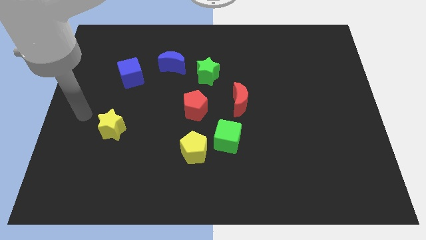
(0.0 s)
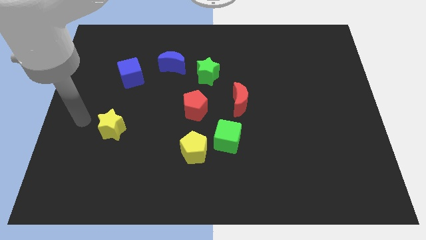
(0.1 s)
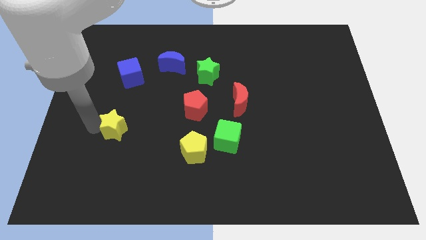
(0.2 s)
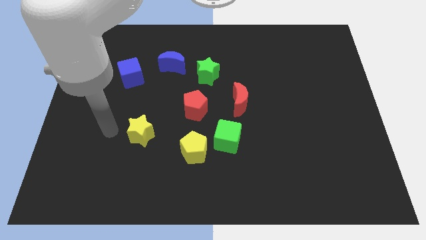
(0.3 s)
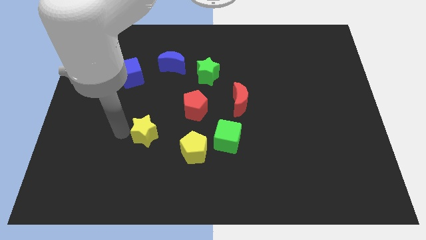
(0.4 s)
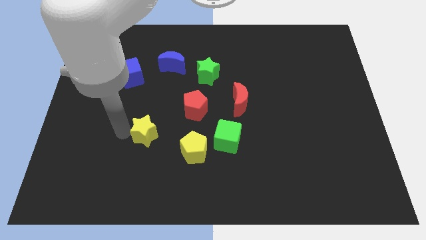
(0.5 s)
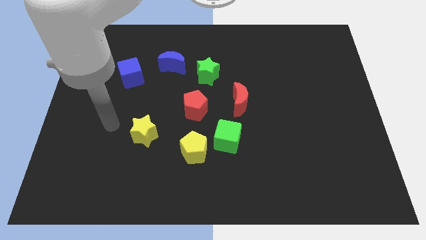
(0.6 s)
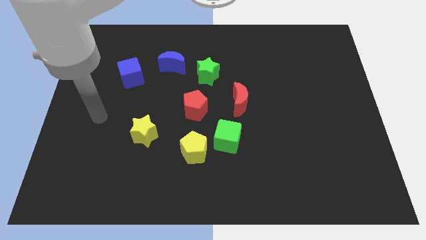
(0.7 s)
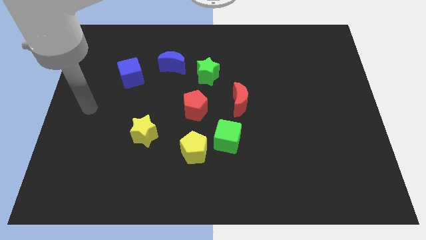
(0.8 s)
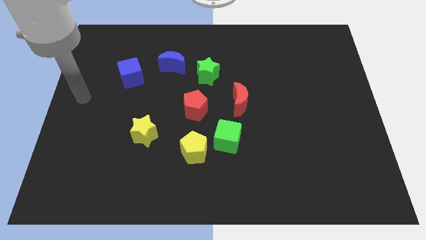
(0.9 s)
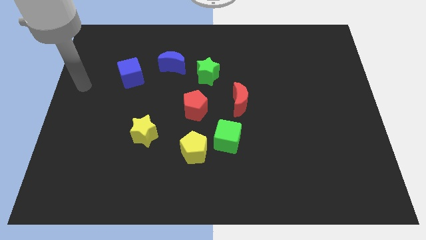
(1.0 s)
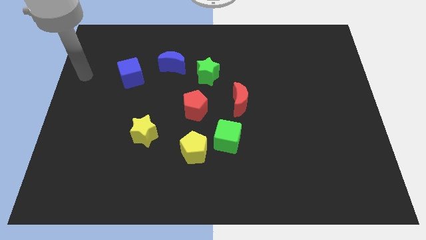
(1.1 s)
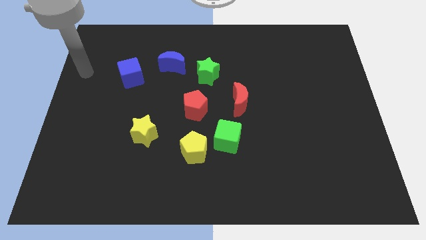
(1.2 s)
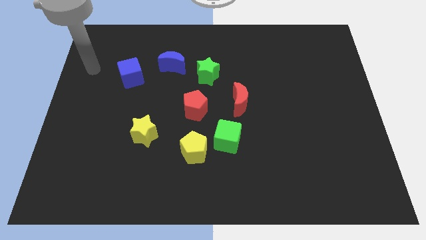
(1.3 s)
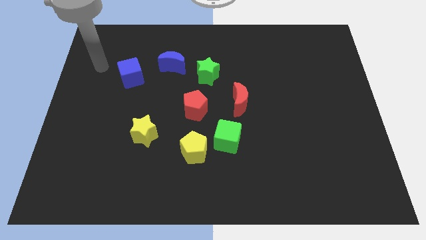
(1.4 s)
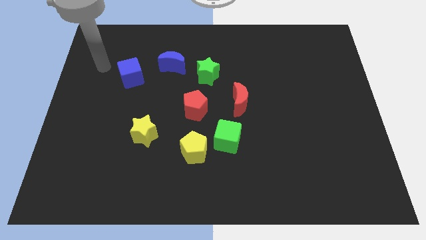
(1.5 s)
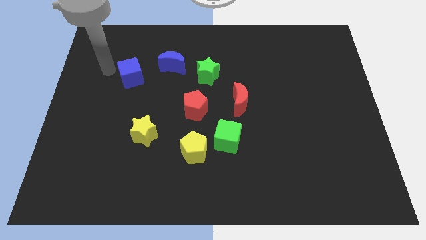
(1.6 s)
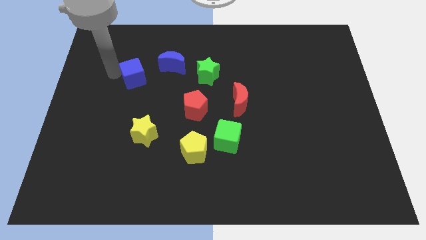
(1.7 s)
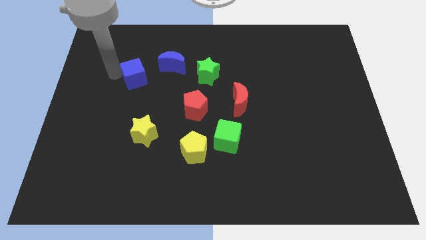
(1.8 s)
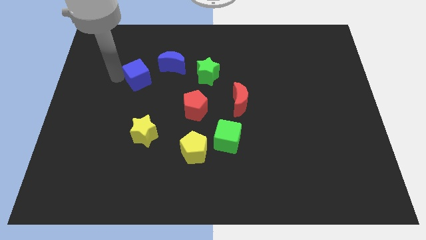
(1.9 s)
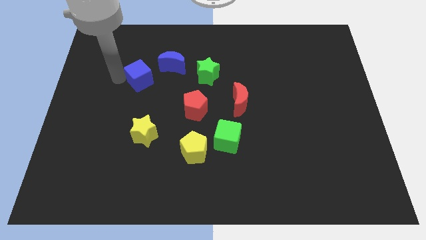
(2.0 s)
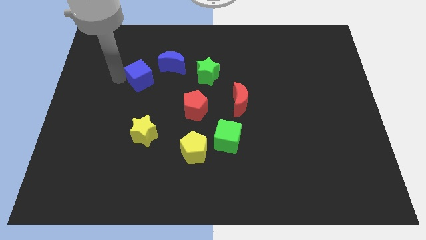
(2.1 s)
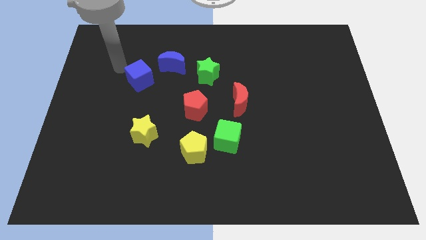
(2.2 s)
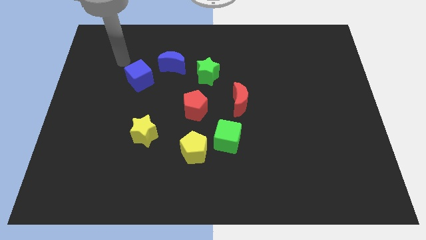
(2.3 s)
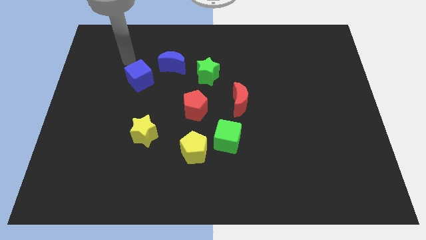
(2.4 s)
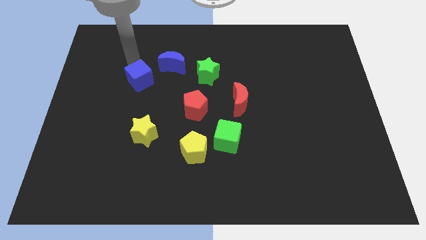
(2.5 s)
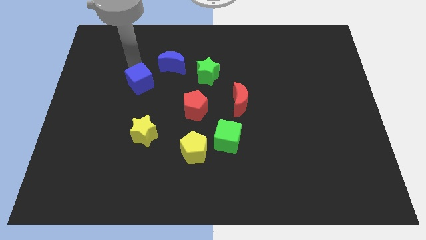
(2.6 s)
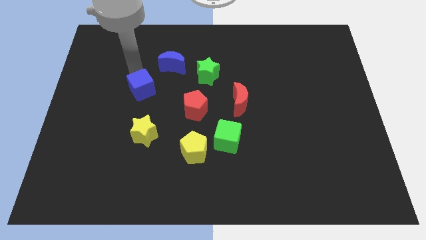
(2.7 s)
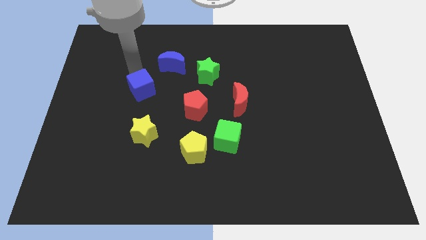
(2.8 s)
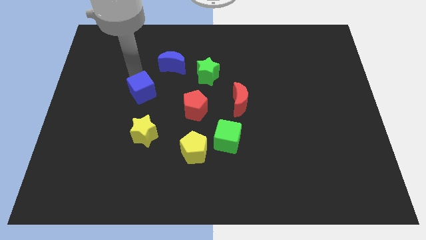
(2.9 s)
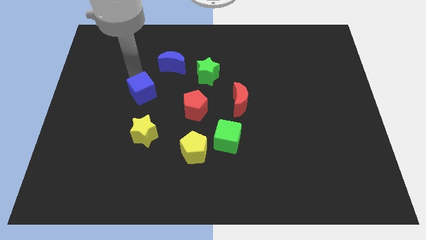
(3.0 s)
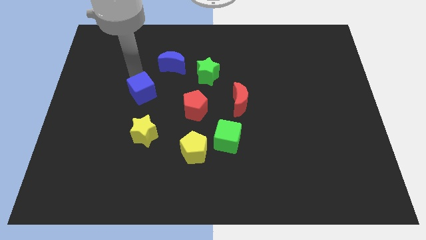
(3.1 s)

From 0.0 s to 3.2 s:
move the blue cube towards top of yellow star

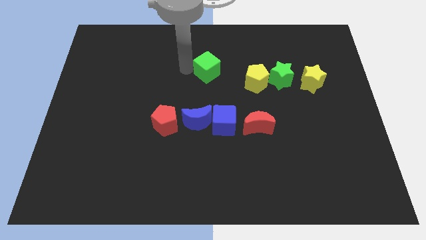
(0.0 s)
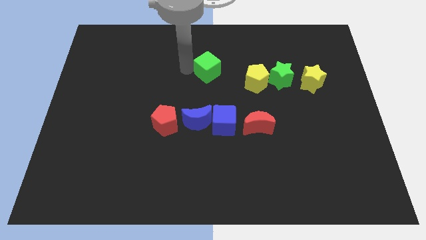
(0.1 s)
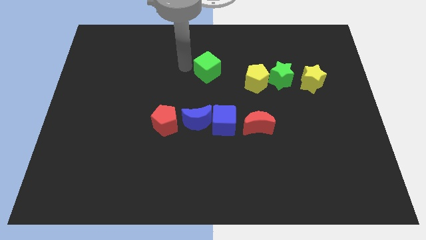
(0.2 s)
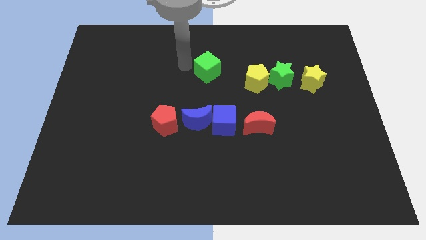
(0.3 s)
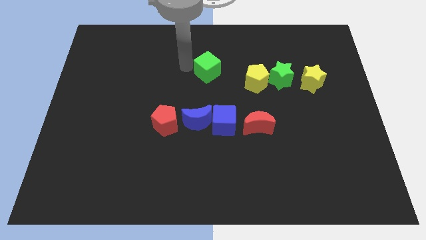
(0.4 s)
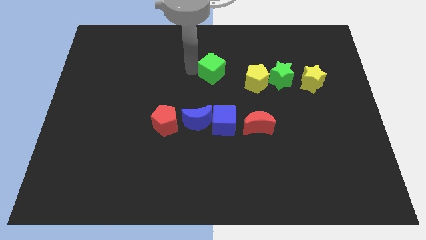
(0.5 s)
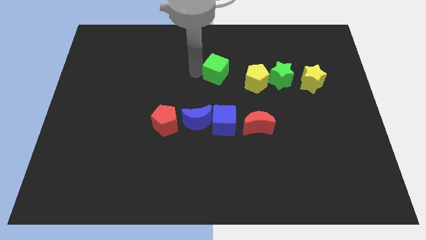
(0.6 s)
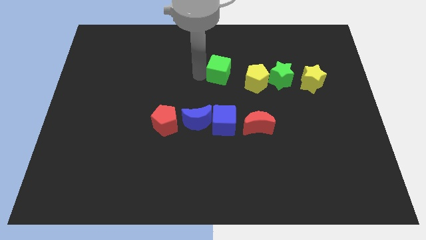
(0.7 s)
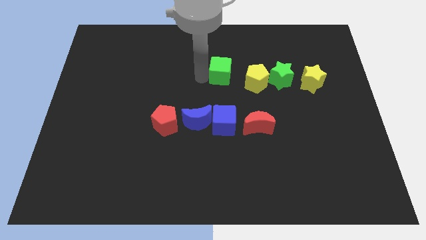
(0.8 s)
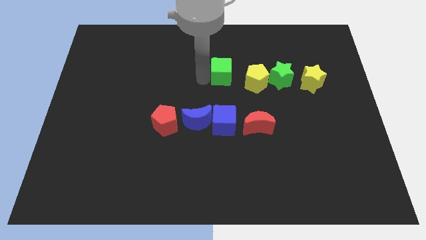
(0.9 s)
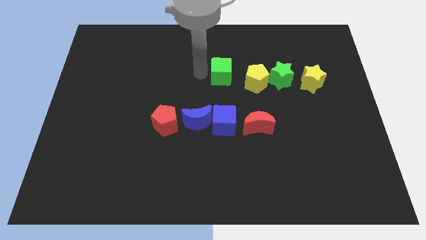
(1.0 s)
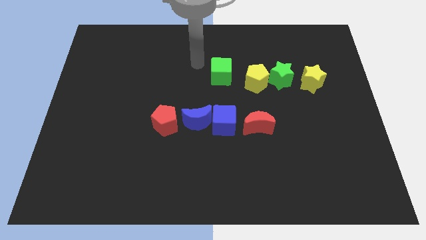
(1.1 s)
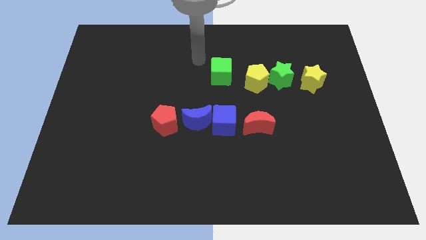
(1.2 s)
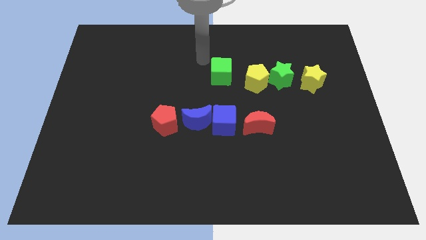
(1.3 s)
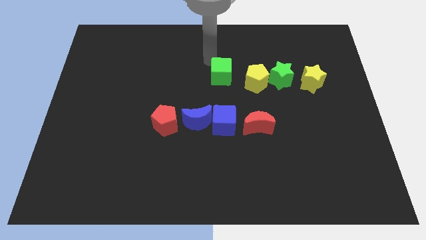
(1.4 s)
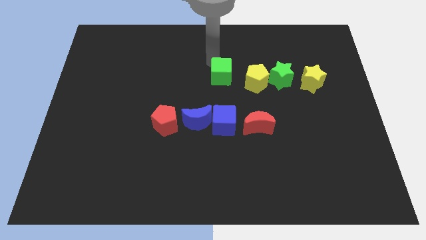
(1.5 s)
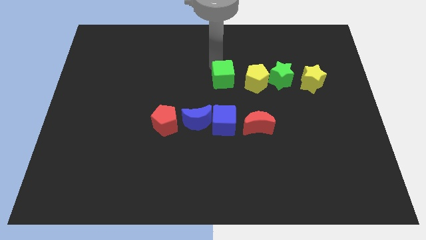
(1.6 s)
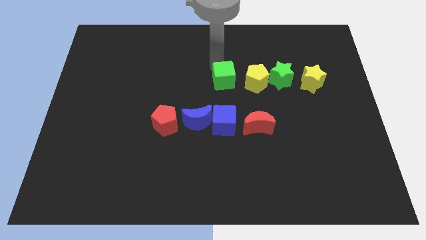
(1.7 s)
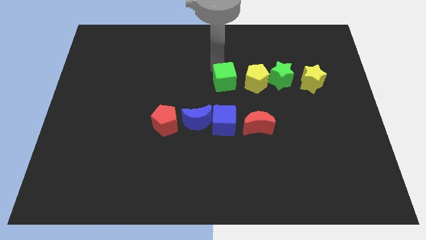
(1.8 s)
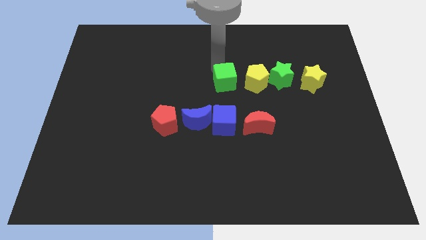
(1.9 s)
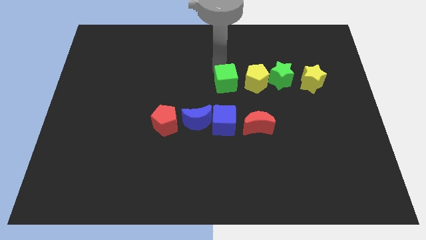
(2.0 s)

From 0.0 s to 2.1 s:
move the green cube close to the left of the yellow pentagon

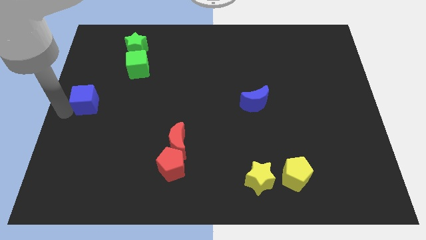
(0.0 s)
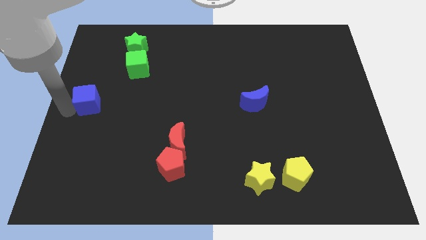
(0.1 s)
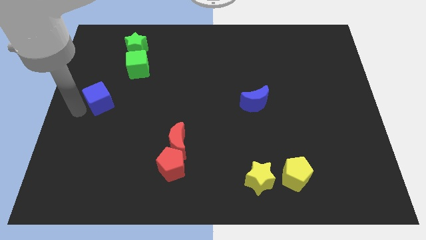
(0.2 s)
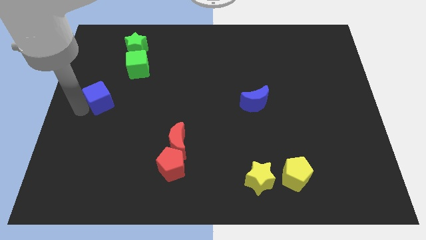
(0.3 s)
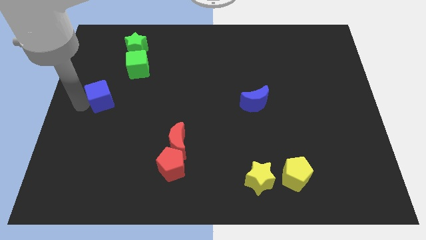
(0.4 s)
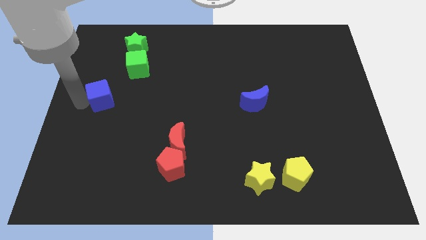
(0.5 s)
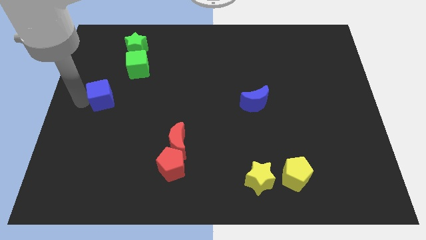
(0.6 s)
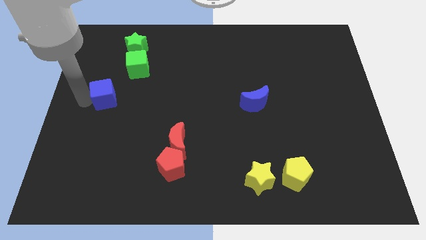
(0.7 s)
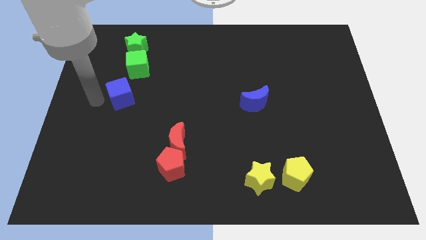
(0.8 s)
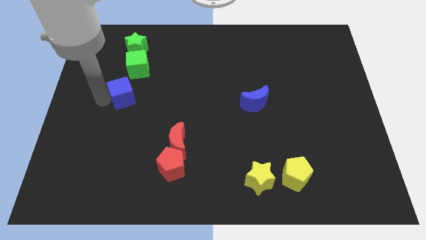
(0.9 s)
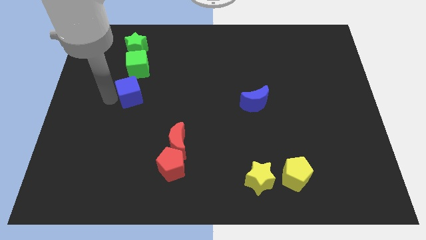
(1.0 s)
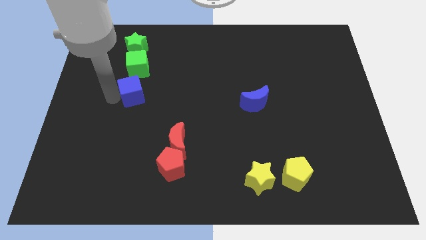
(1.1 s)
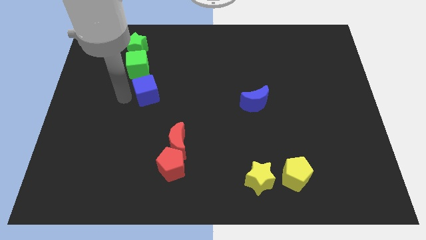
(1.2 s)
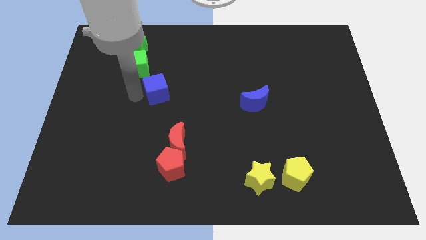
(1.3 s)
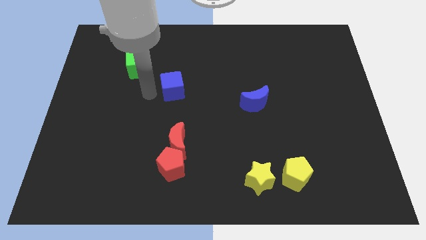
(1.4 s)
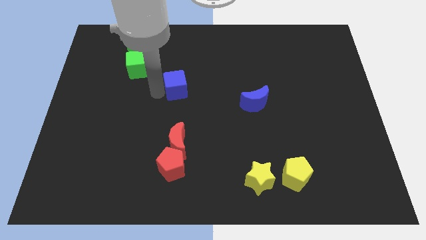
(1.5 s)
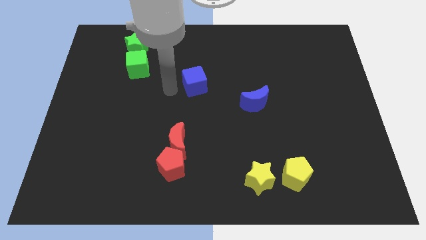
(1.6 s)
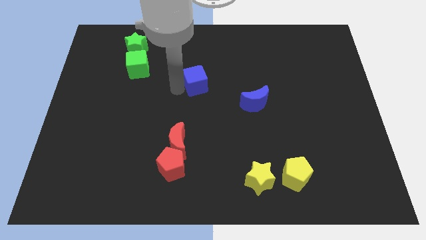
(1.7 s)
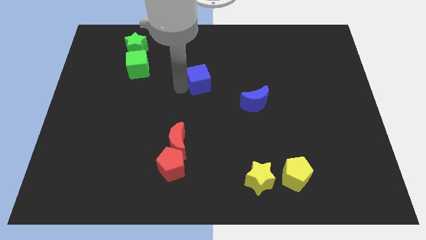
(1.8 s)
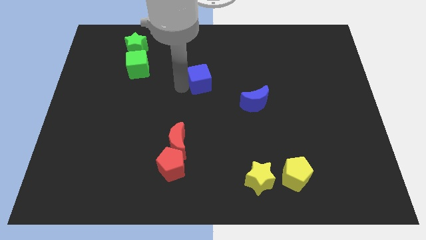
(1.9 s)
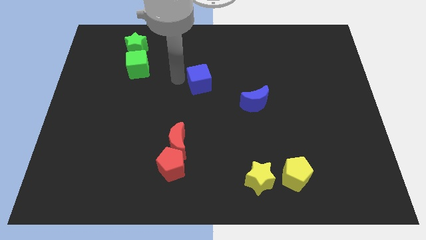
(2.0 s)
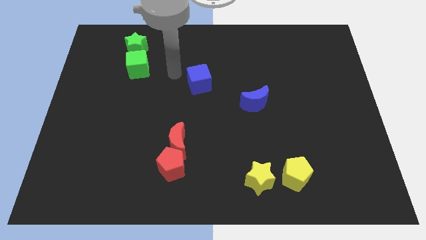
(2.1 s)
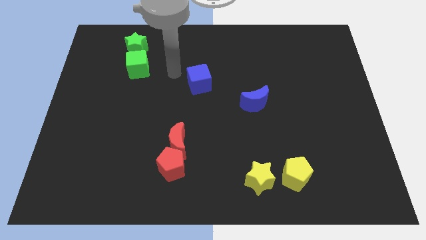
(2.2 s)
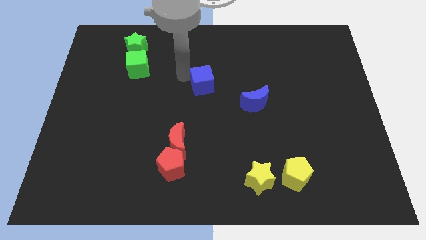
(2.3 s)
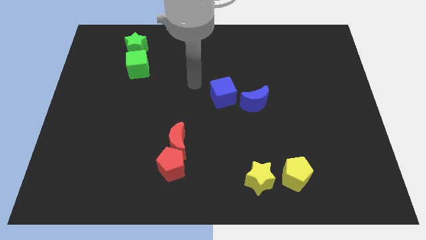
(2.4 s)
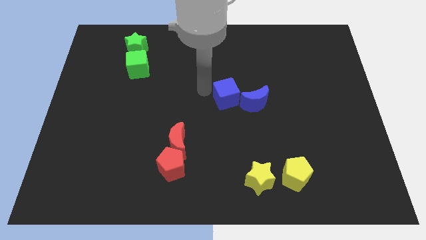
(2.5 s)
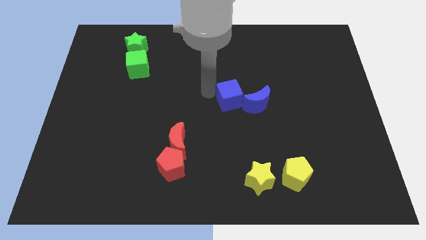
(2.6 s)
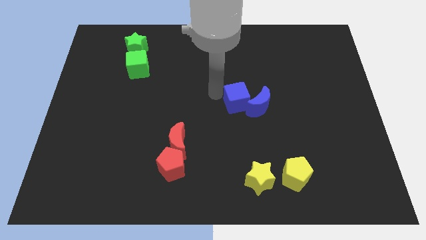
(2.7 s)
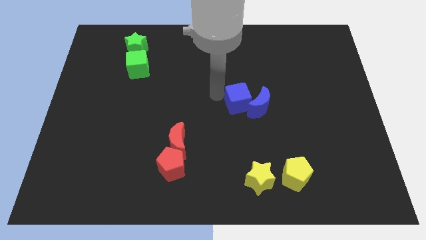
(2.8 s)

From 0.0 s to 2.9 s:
move blue cube into blue moon

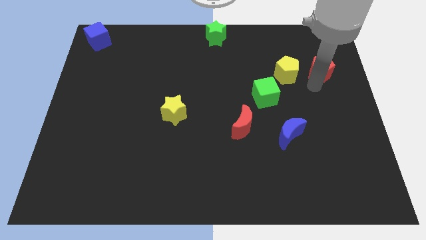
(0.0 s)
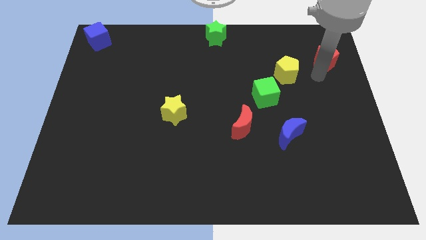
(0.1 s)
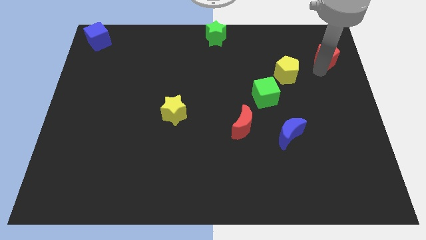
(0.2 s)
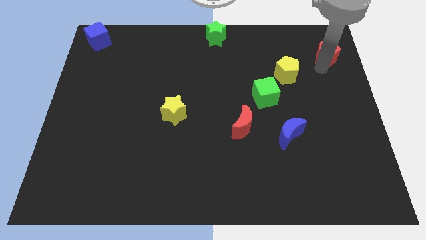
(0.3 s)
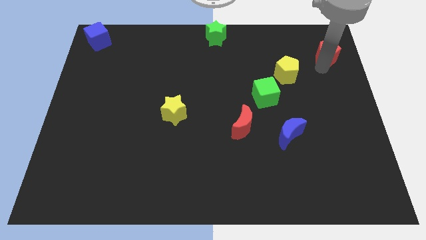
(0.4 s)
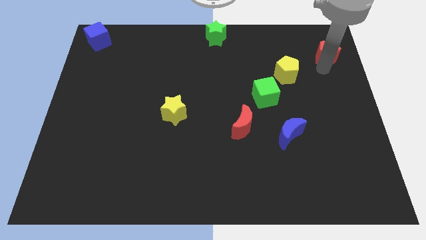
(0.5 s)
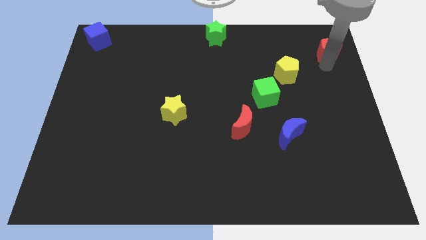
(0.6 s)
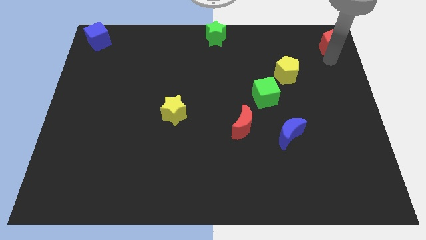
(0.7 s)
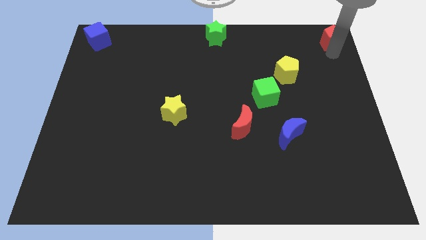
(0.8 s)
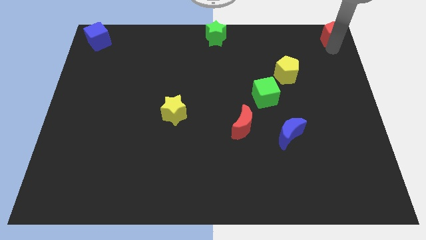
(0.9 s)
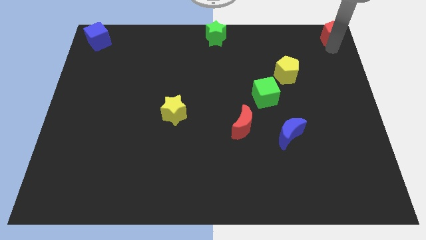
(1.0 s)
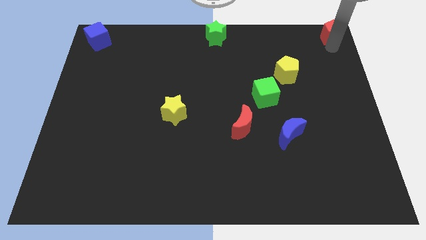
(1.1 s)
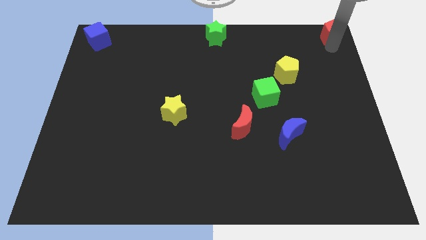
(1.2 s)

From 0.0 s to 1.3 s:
move the red pentagon to the top right corner
